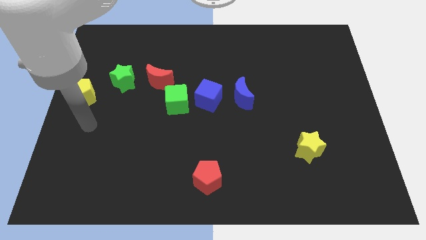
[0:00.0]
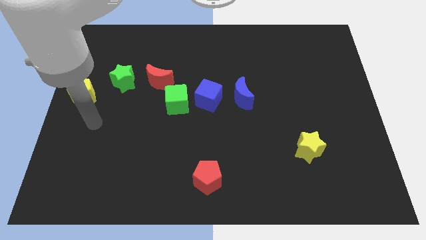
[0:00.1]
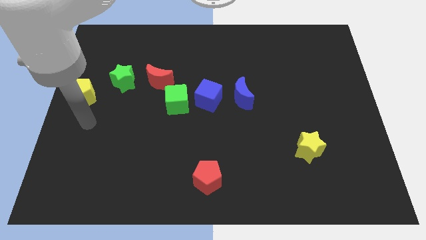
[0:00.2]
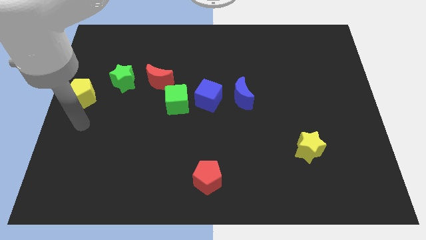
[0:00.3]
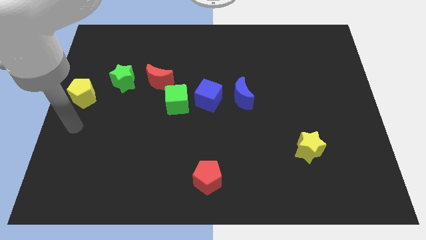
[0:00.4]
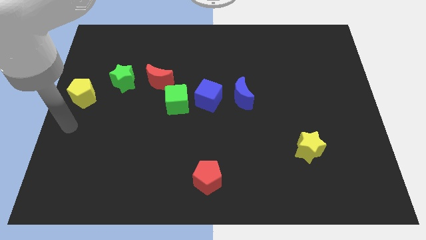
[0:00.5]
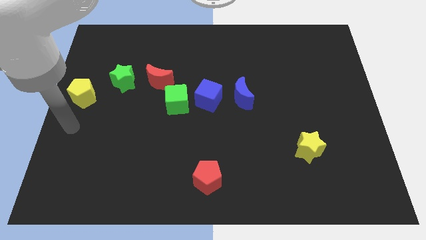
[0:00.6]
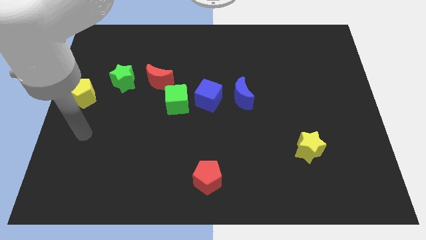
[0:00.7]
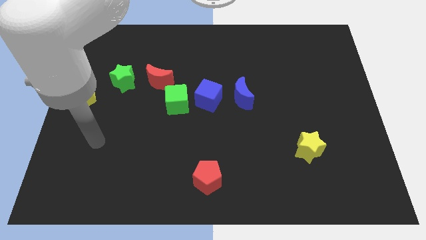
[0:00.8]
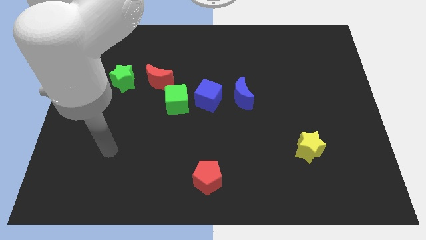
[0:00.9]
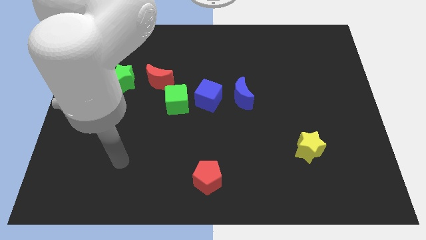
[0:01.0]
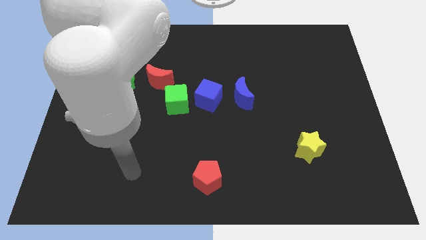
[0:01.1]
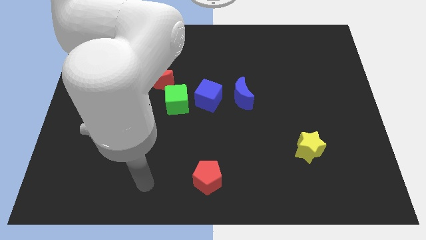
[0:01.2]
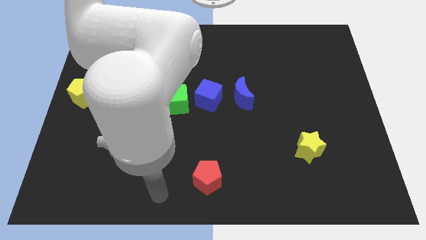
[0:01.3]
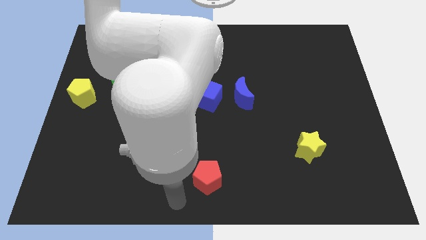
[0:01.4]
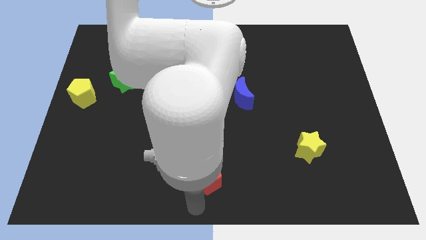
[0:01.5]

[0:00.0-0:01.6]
point your hand below the red pentagon

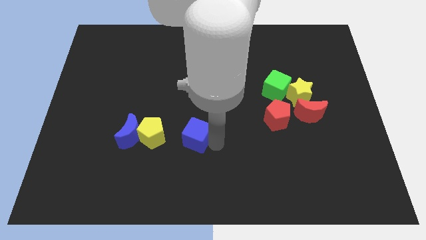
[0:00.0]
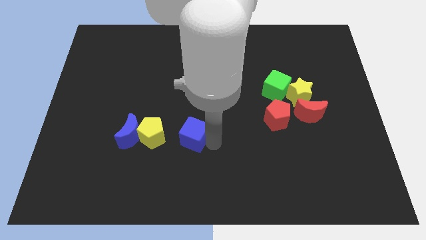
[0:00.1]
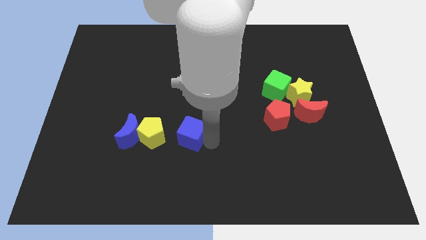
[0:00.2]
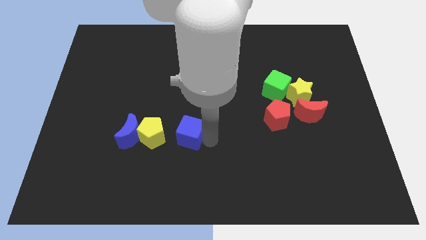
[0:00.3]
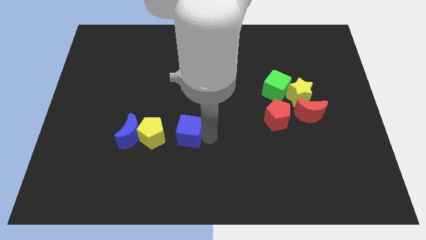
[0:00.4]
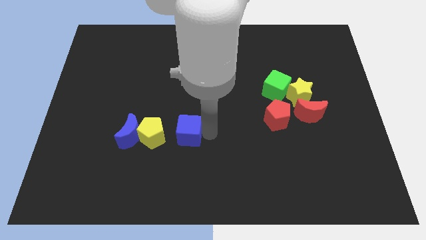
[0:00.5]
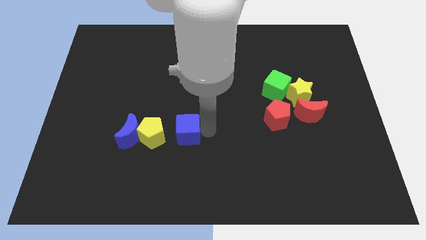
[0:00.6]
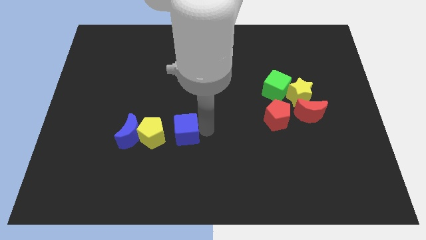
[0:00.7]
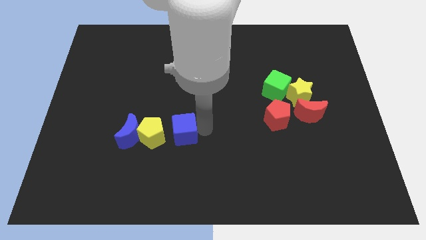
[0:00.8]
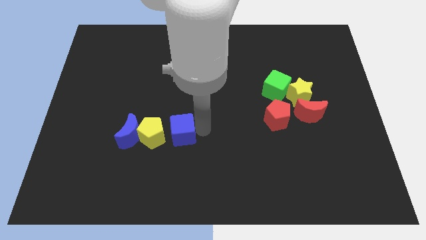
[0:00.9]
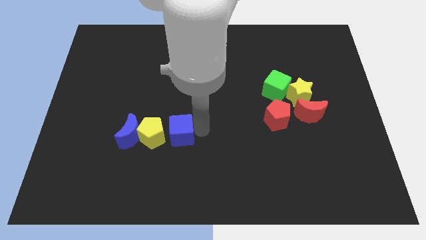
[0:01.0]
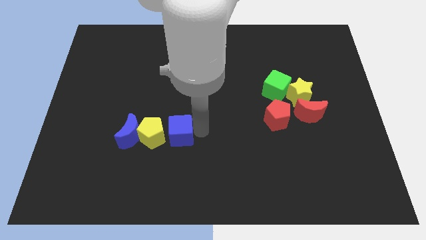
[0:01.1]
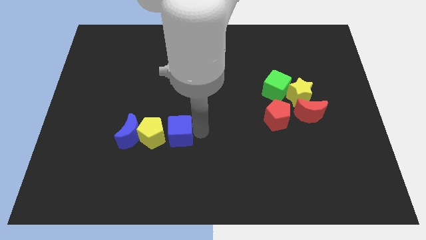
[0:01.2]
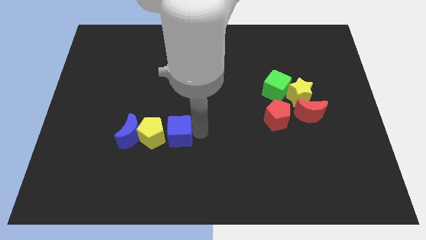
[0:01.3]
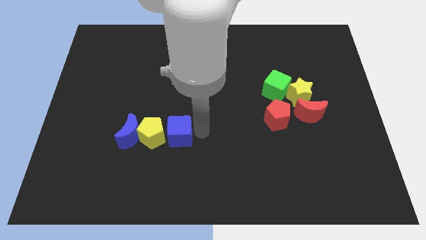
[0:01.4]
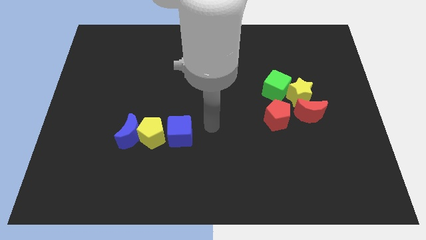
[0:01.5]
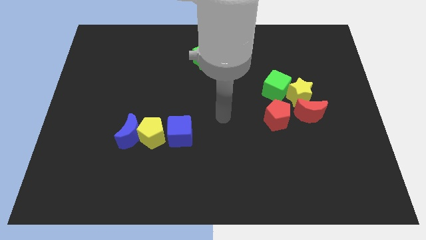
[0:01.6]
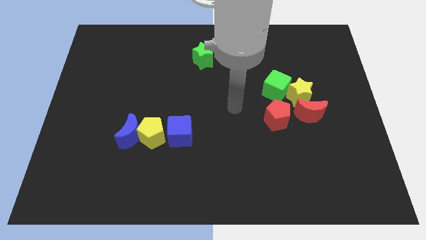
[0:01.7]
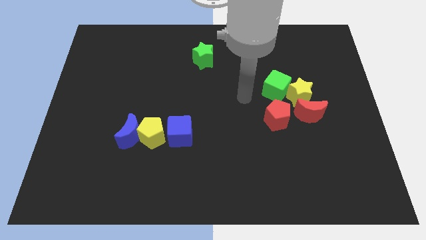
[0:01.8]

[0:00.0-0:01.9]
move the blue cube close right to the yellow pentagon

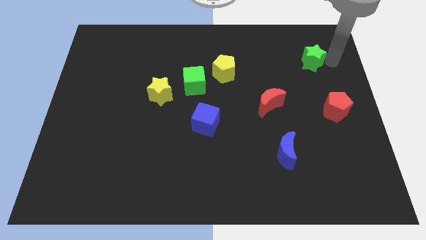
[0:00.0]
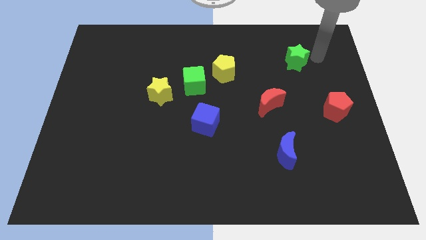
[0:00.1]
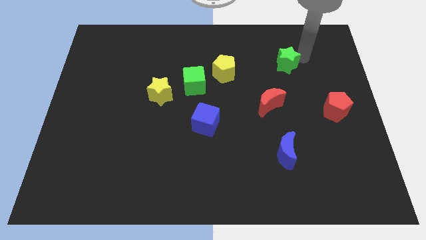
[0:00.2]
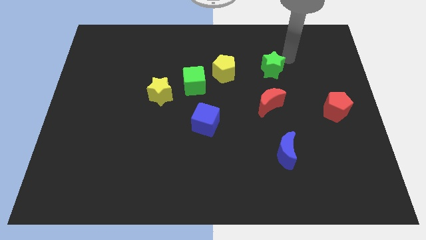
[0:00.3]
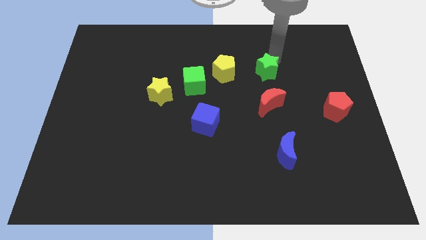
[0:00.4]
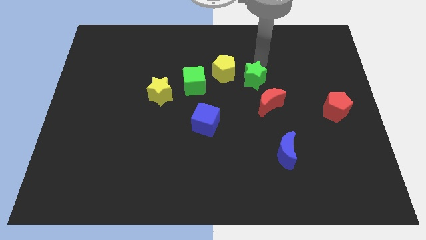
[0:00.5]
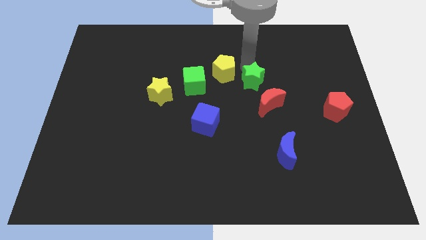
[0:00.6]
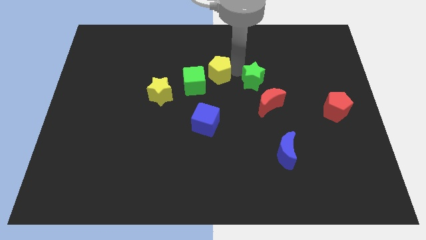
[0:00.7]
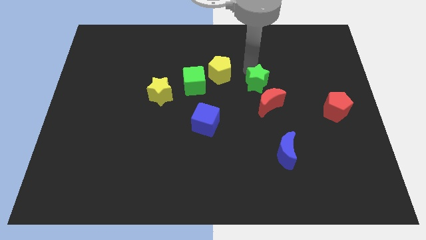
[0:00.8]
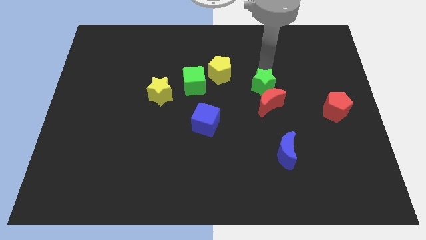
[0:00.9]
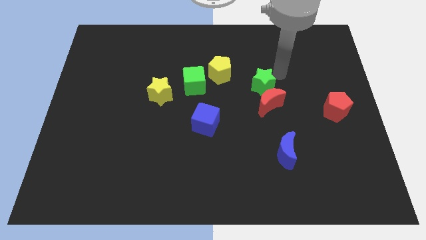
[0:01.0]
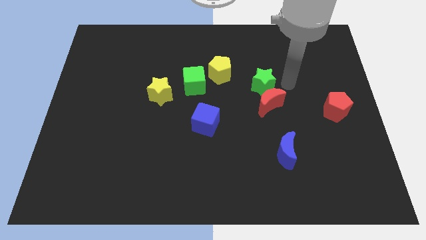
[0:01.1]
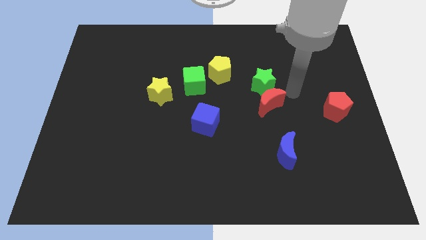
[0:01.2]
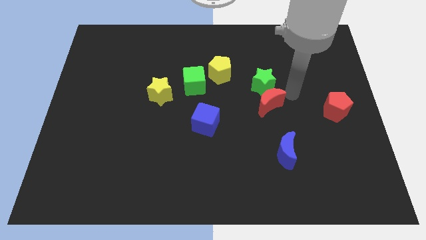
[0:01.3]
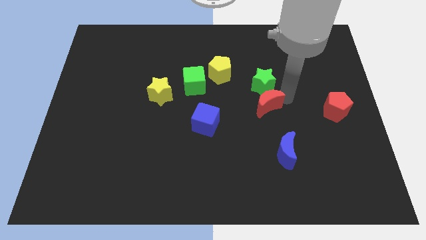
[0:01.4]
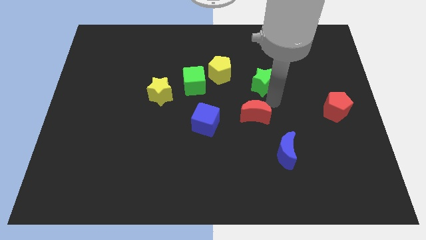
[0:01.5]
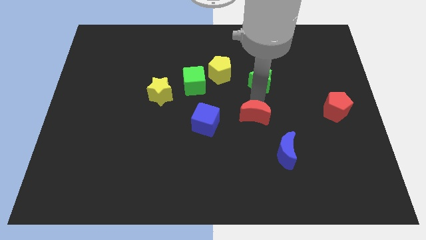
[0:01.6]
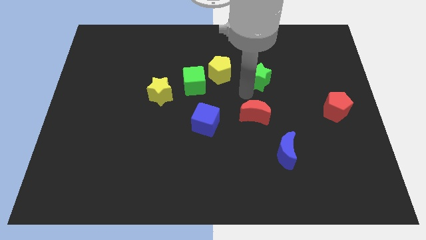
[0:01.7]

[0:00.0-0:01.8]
push the green star to the right of the yellow pentagon

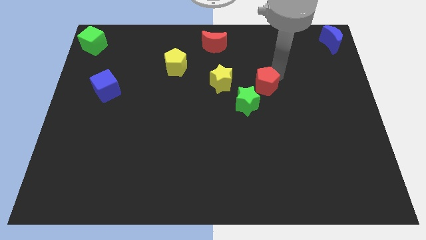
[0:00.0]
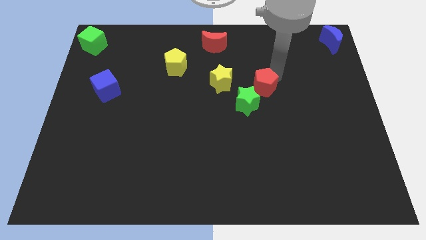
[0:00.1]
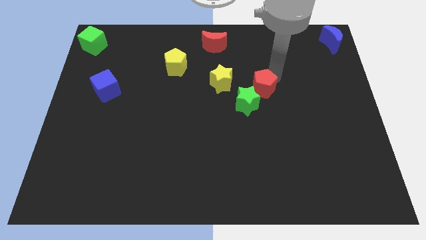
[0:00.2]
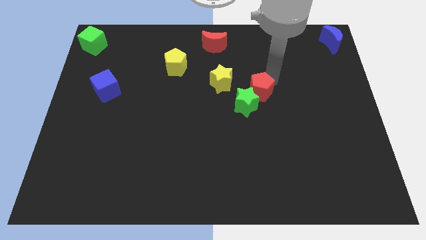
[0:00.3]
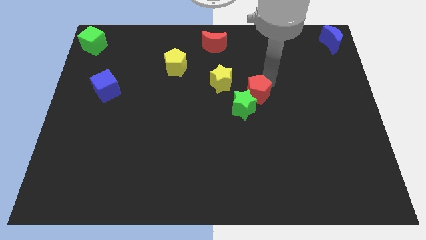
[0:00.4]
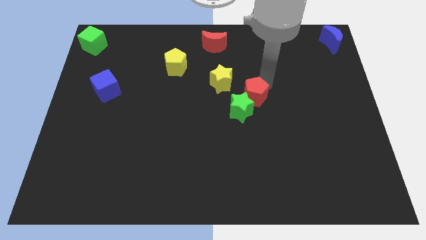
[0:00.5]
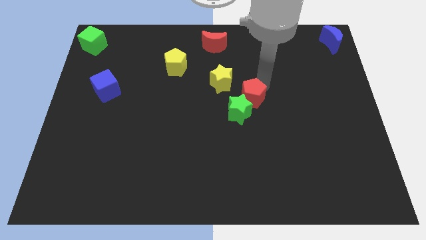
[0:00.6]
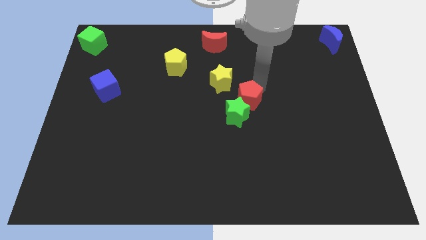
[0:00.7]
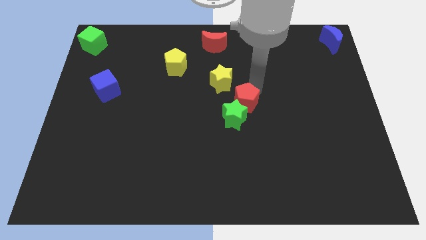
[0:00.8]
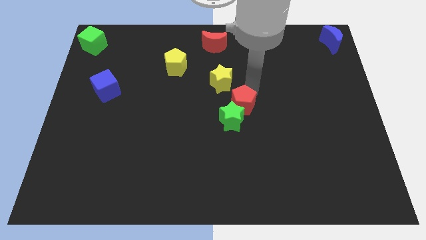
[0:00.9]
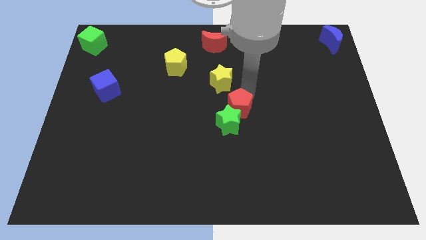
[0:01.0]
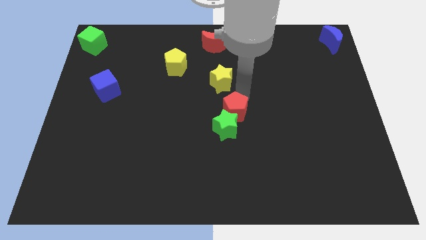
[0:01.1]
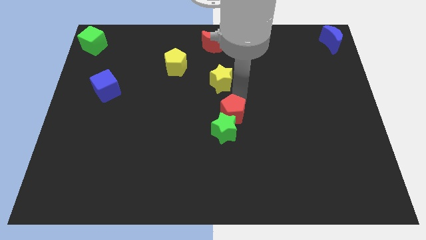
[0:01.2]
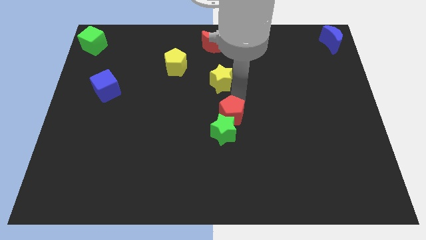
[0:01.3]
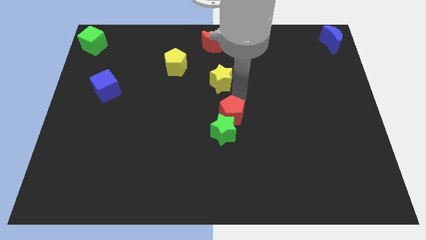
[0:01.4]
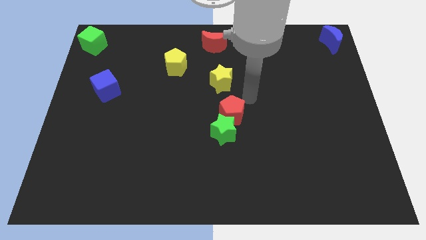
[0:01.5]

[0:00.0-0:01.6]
push the red pentagon into the green star

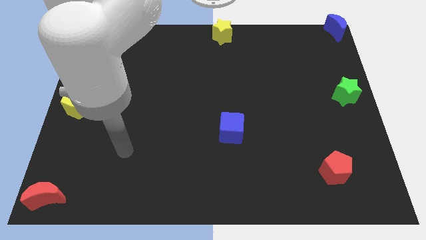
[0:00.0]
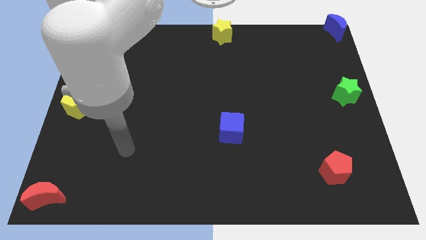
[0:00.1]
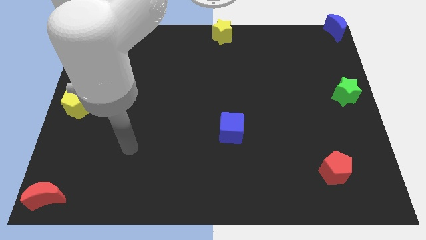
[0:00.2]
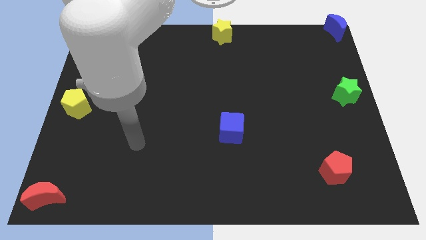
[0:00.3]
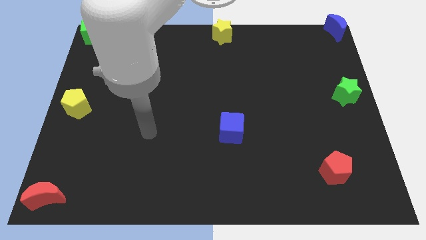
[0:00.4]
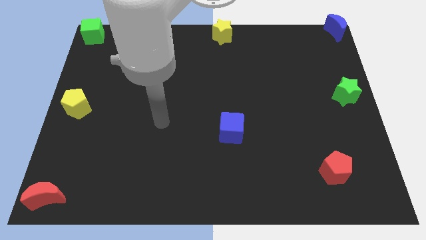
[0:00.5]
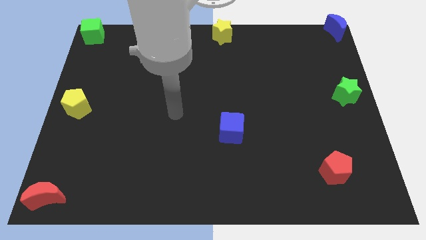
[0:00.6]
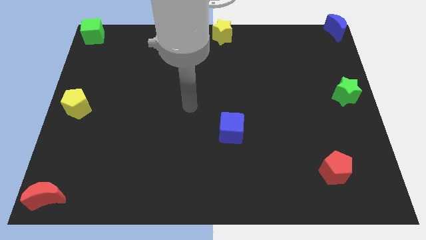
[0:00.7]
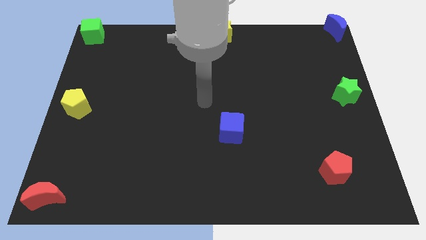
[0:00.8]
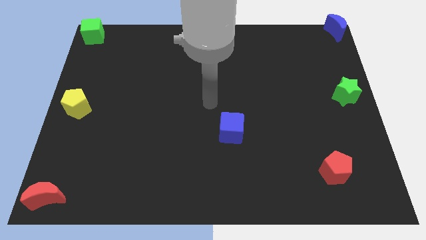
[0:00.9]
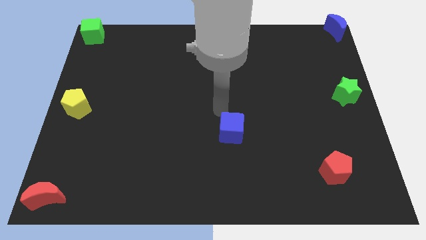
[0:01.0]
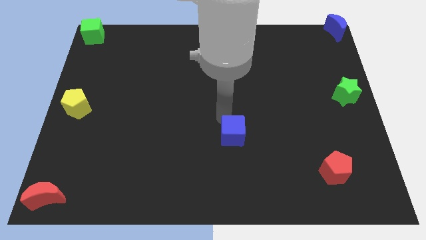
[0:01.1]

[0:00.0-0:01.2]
move your arm diagonally top left to the blue cube

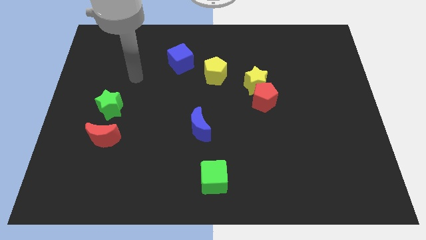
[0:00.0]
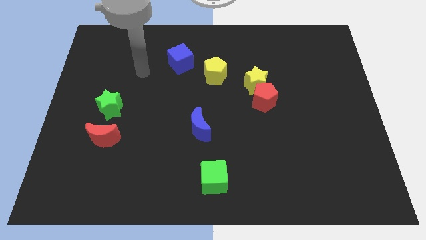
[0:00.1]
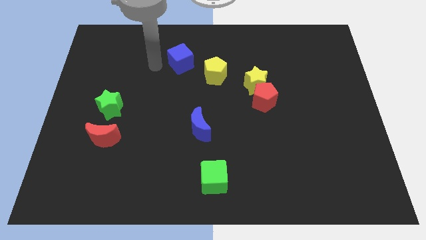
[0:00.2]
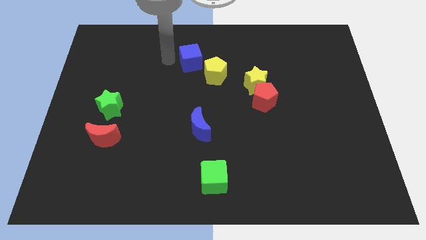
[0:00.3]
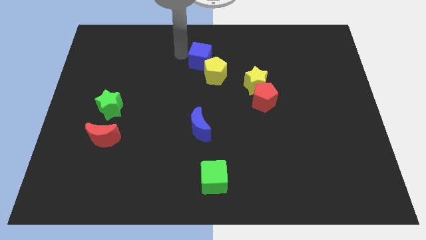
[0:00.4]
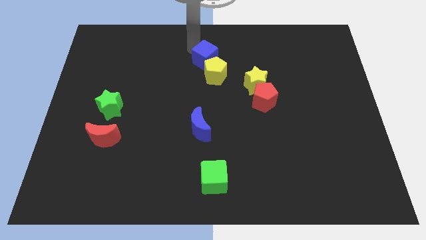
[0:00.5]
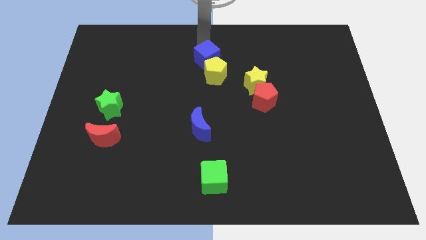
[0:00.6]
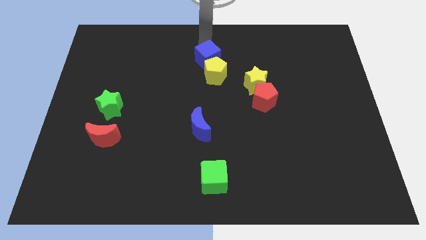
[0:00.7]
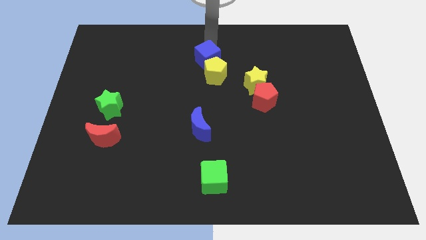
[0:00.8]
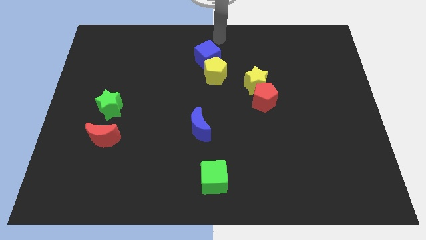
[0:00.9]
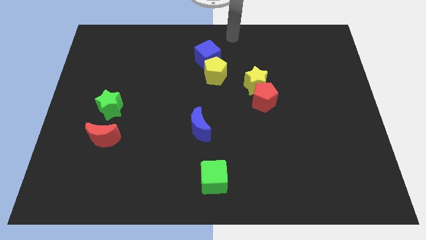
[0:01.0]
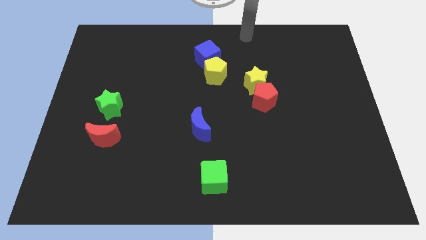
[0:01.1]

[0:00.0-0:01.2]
slide the blue cube to the top right of the yellow pentagon
